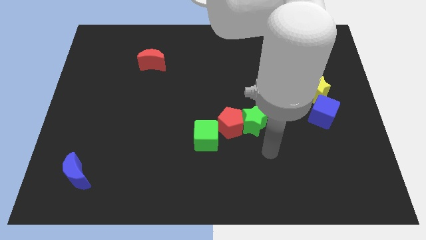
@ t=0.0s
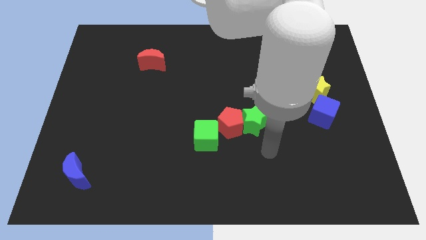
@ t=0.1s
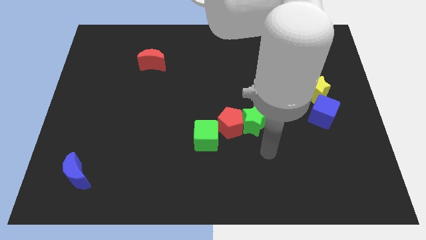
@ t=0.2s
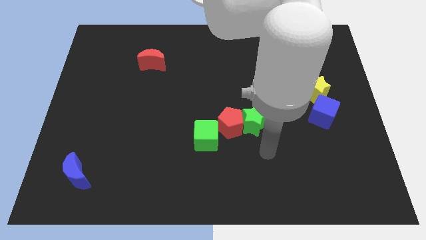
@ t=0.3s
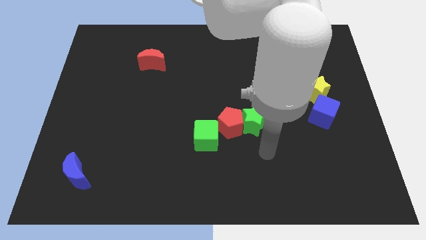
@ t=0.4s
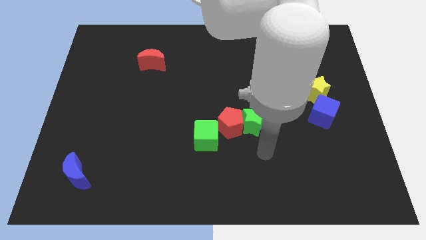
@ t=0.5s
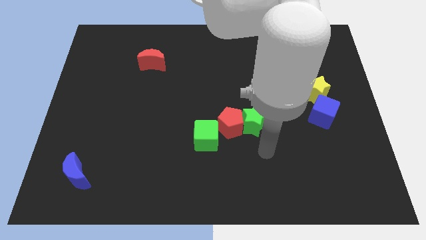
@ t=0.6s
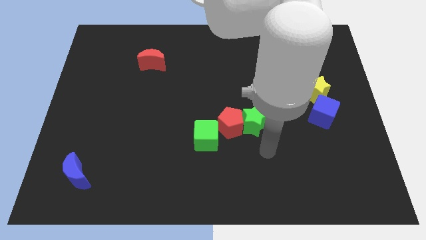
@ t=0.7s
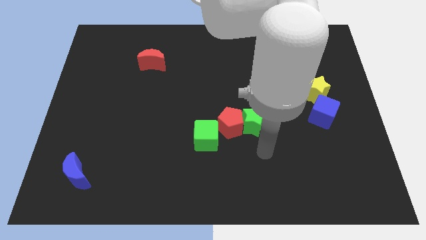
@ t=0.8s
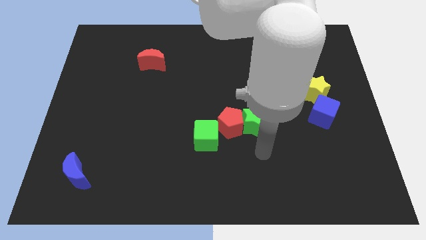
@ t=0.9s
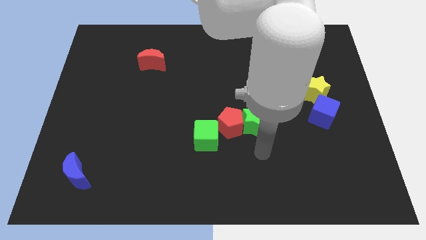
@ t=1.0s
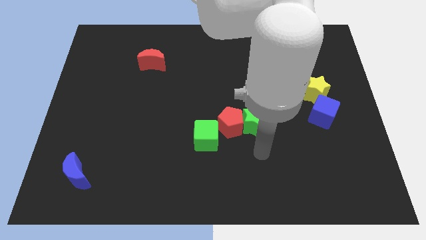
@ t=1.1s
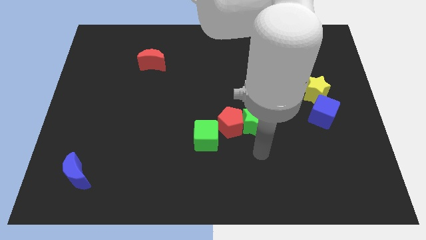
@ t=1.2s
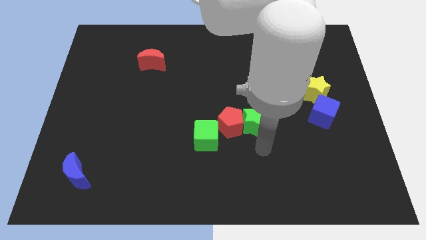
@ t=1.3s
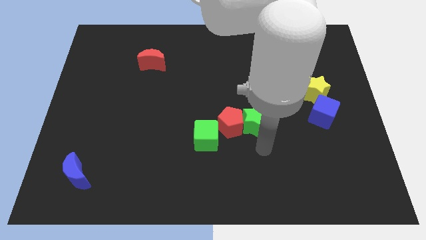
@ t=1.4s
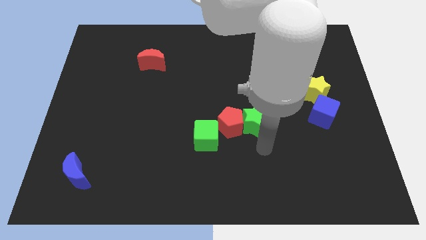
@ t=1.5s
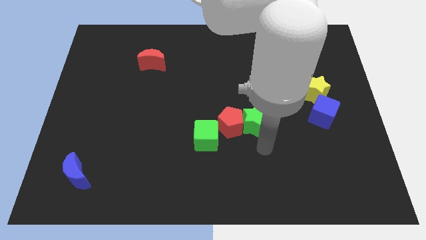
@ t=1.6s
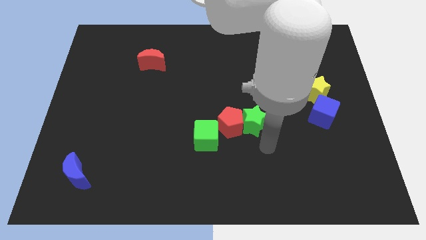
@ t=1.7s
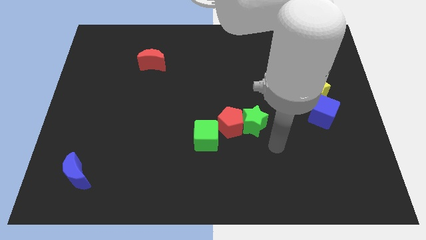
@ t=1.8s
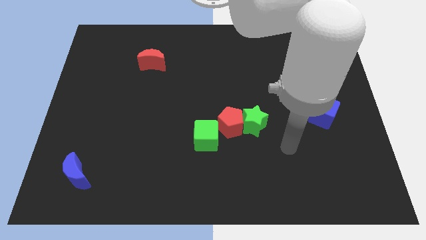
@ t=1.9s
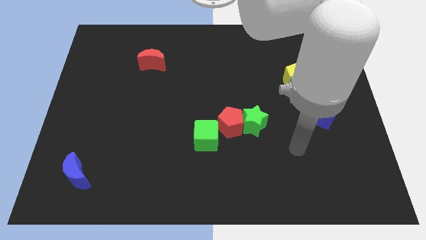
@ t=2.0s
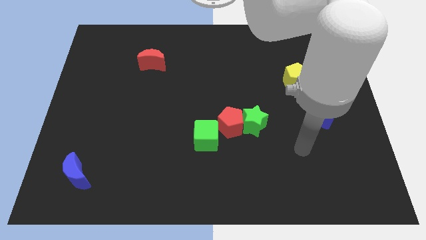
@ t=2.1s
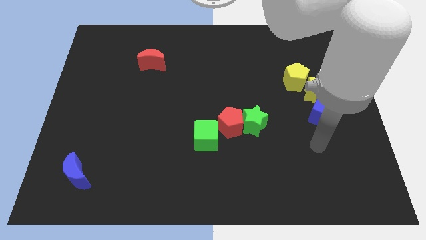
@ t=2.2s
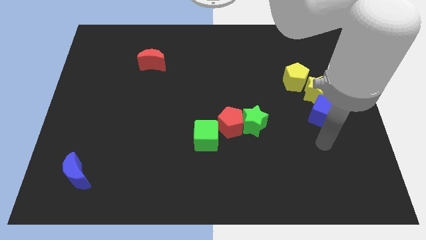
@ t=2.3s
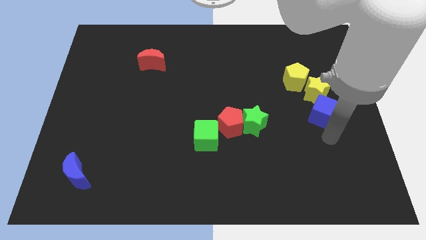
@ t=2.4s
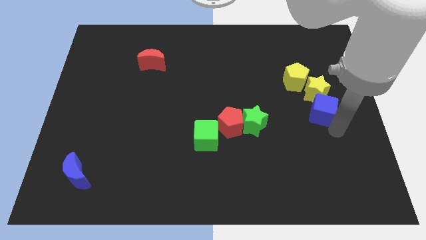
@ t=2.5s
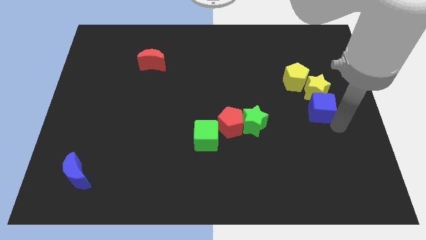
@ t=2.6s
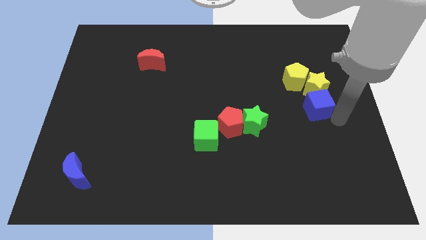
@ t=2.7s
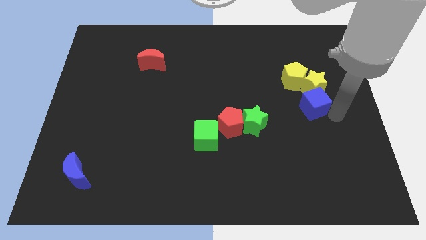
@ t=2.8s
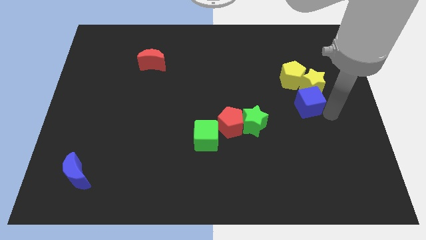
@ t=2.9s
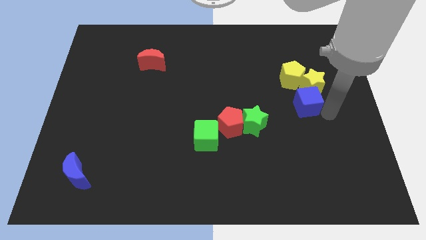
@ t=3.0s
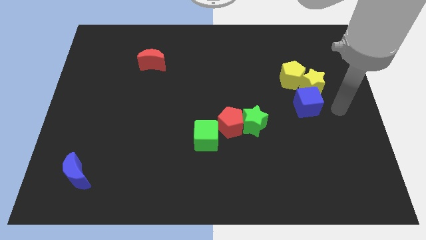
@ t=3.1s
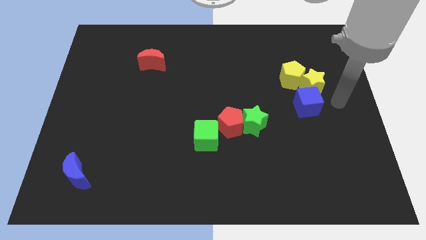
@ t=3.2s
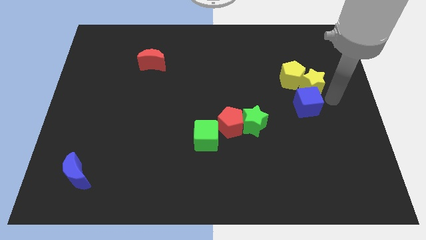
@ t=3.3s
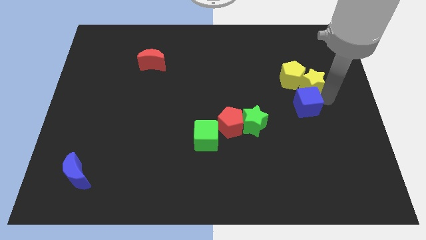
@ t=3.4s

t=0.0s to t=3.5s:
push the blue cube into the yellow star

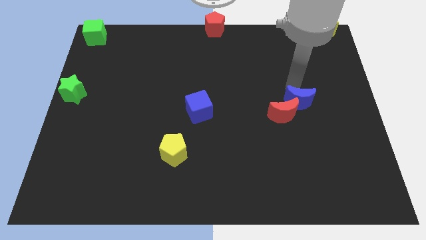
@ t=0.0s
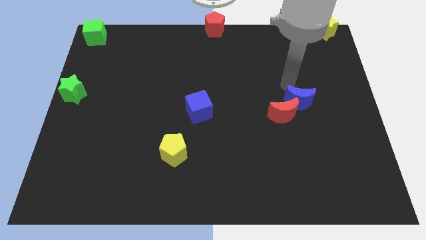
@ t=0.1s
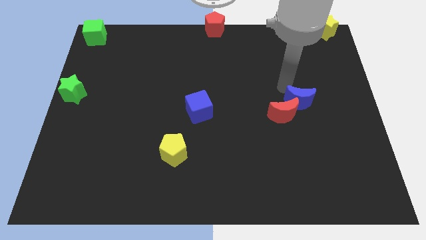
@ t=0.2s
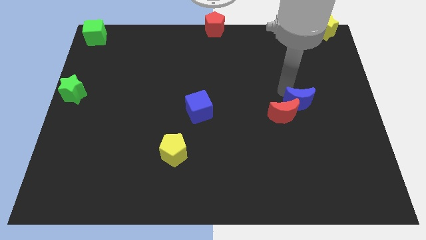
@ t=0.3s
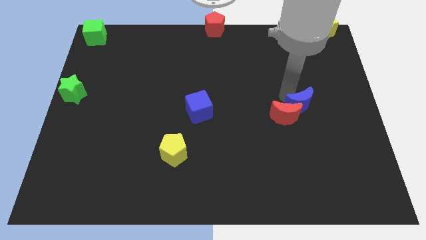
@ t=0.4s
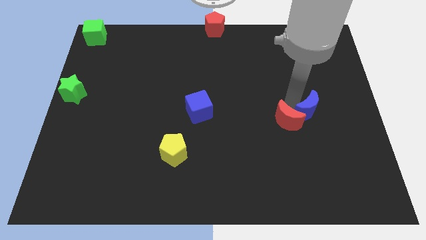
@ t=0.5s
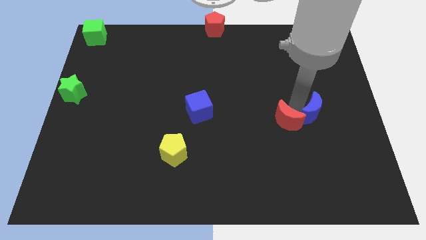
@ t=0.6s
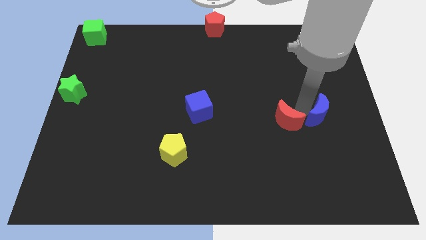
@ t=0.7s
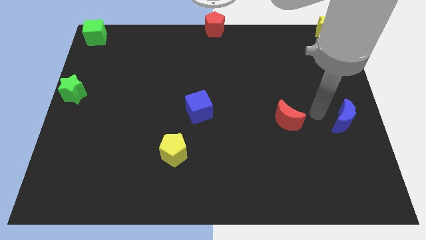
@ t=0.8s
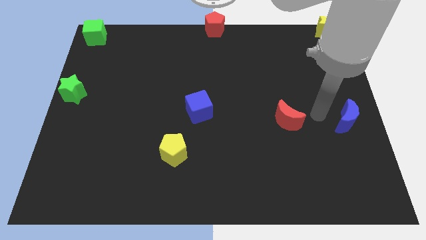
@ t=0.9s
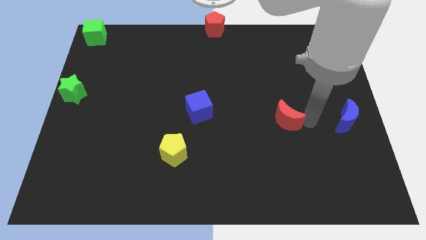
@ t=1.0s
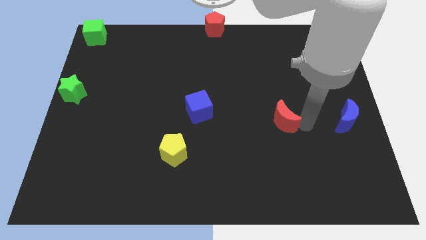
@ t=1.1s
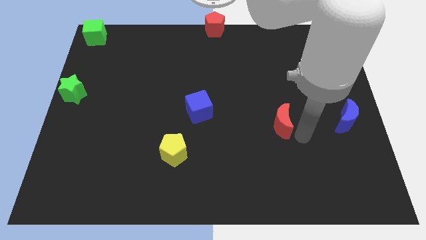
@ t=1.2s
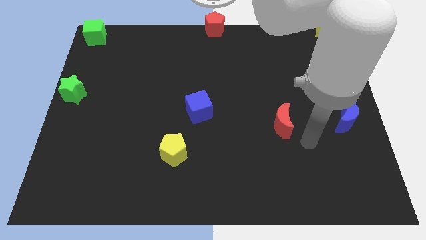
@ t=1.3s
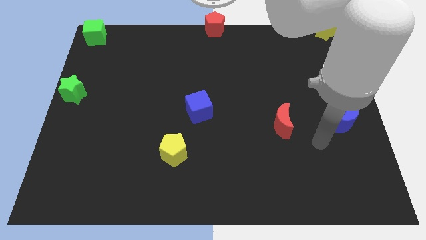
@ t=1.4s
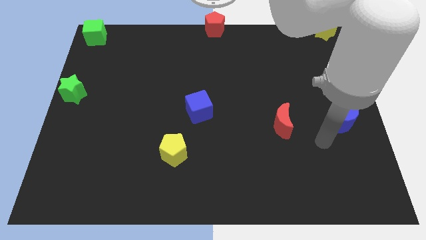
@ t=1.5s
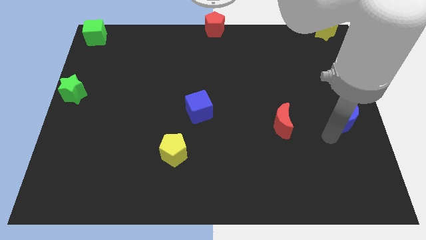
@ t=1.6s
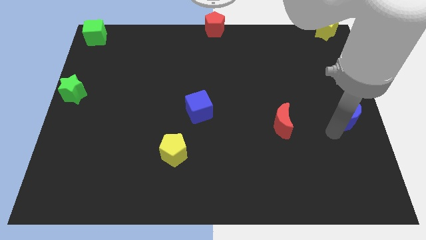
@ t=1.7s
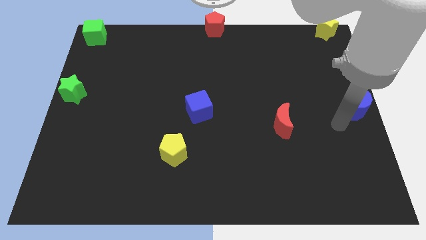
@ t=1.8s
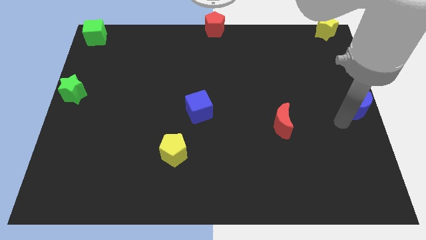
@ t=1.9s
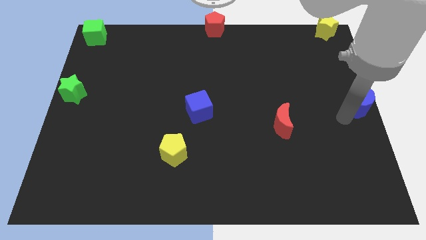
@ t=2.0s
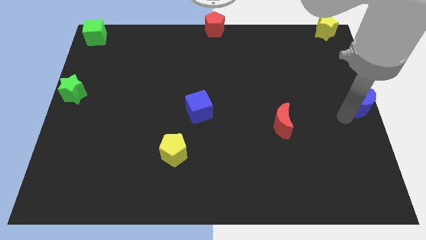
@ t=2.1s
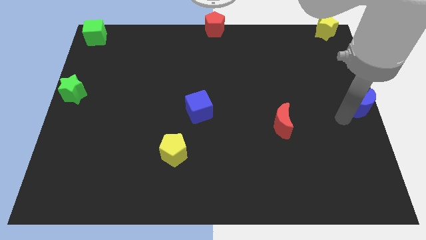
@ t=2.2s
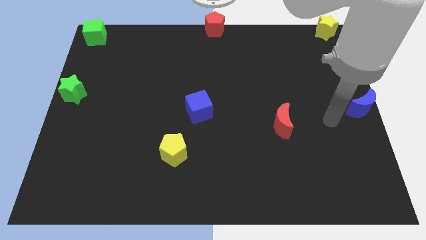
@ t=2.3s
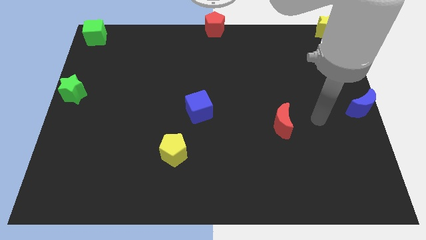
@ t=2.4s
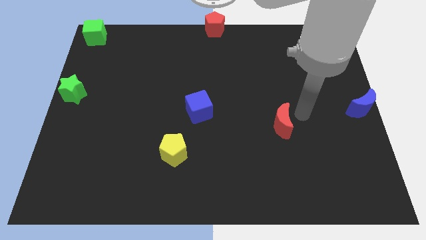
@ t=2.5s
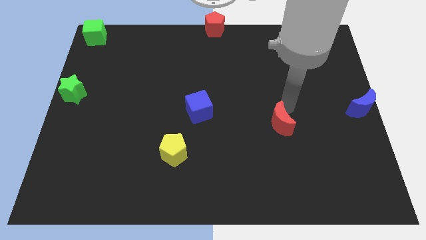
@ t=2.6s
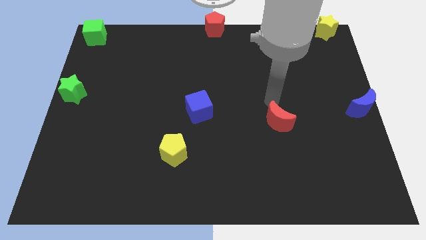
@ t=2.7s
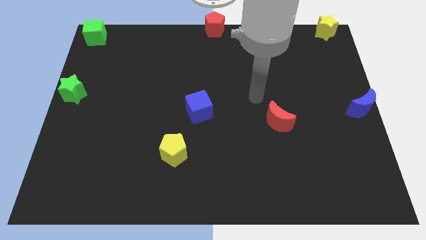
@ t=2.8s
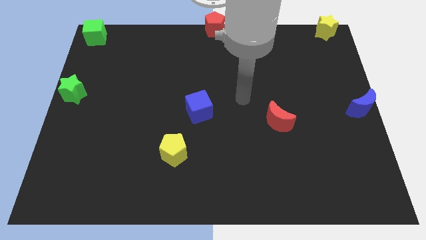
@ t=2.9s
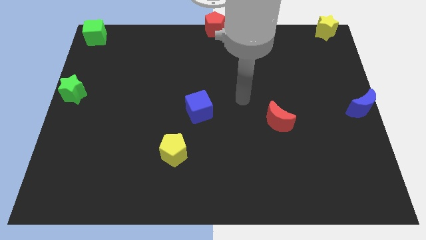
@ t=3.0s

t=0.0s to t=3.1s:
separate red crescent and the blue crescent

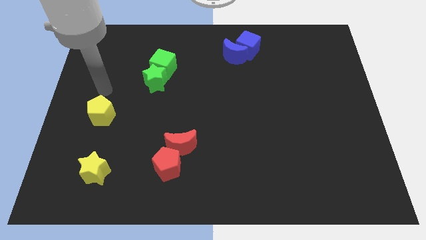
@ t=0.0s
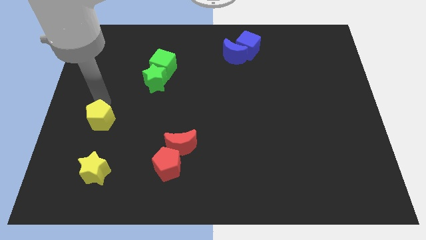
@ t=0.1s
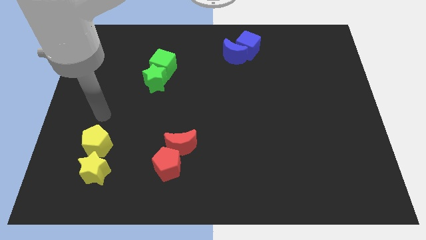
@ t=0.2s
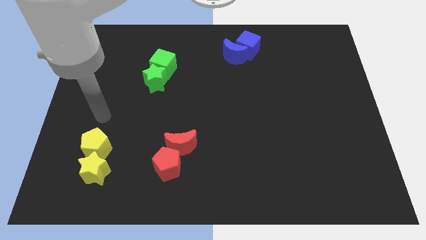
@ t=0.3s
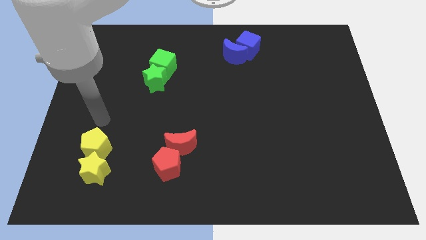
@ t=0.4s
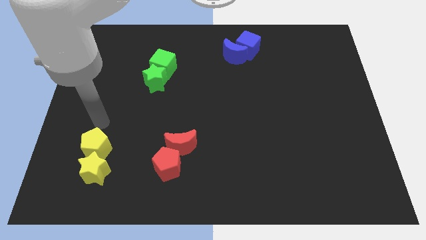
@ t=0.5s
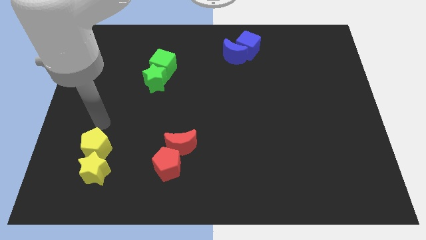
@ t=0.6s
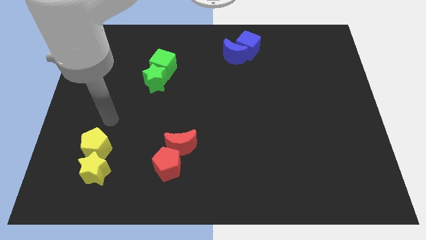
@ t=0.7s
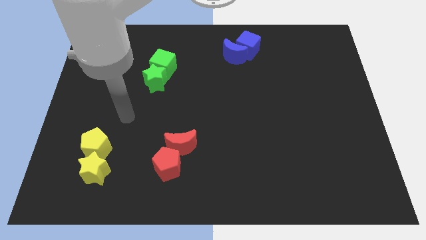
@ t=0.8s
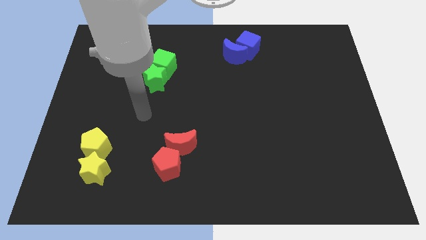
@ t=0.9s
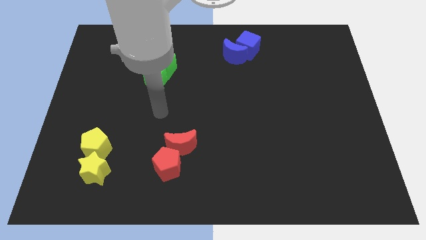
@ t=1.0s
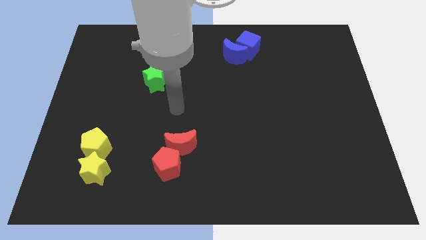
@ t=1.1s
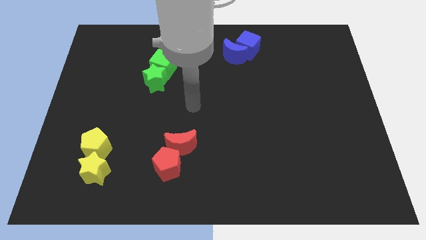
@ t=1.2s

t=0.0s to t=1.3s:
move the yellow pentagon into the yellow star

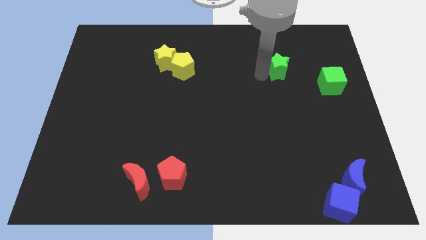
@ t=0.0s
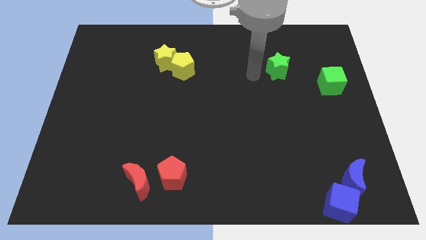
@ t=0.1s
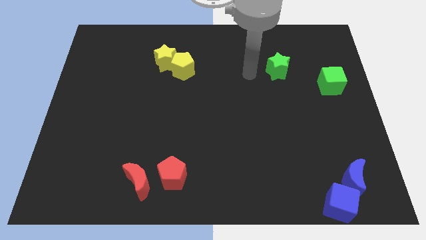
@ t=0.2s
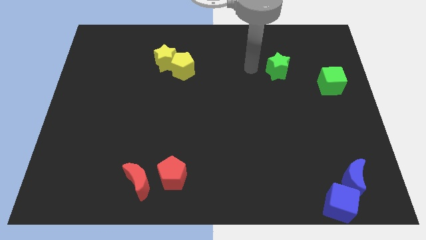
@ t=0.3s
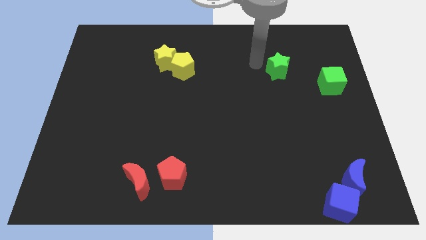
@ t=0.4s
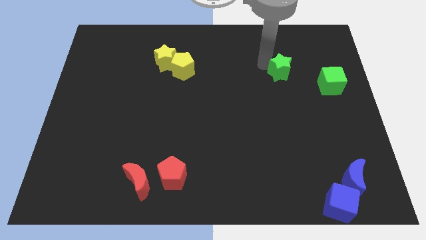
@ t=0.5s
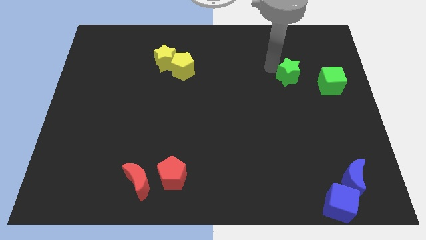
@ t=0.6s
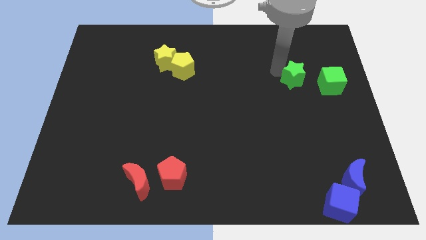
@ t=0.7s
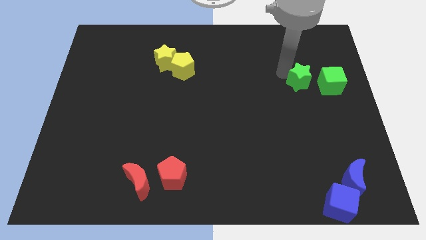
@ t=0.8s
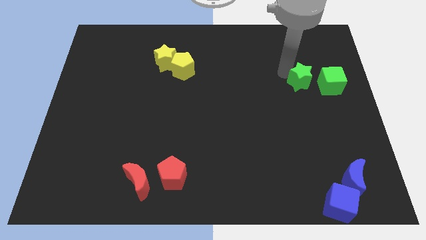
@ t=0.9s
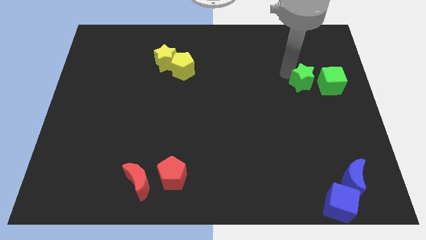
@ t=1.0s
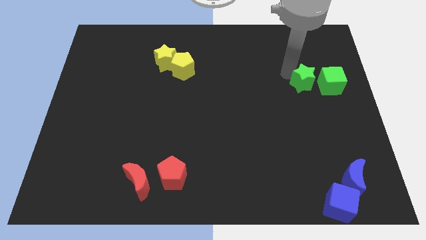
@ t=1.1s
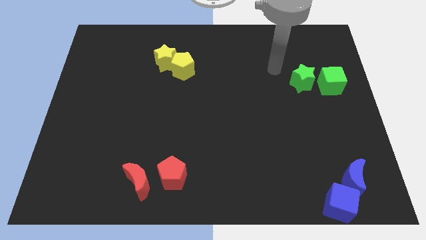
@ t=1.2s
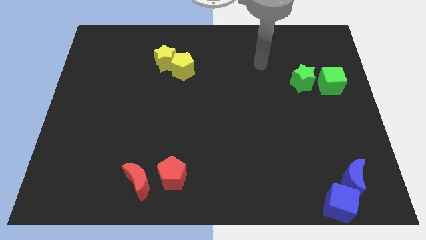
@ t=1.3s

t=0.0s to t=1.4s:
place the green star to the left of the green cube
